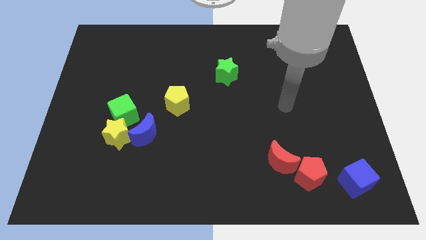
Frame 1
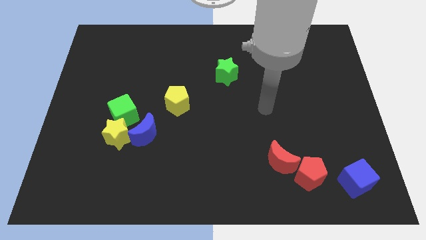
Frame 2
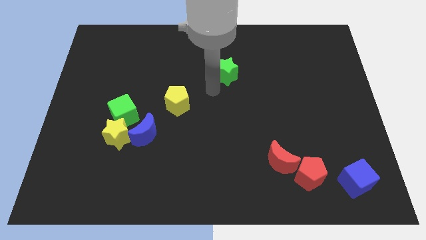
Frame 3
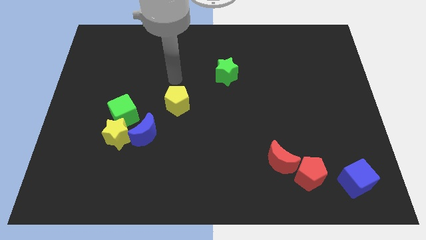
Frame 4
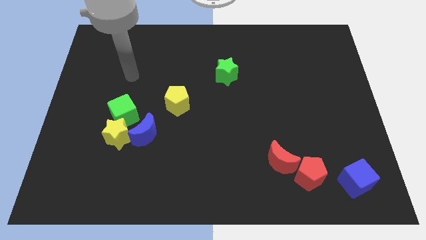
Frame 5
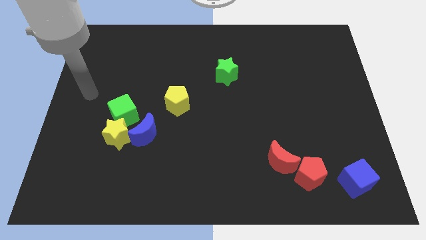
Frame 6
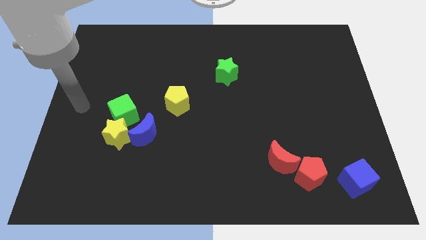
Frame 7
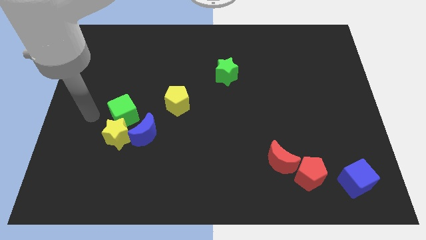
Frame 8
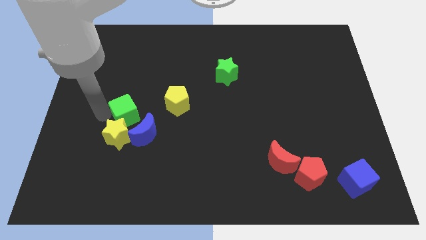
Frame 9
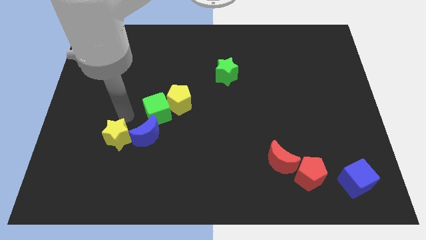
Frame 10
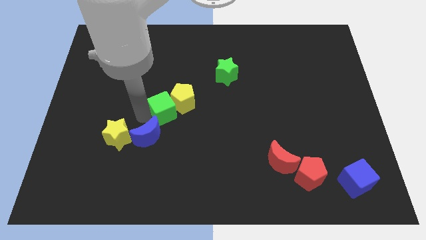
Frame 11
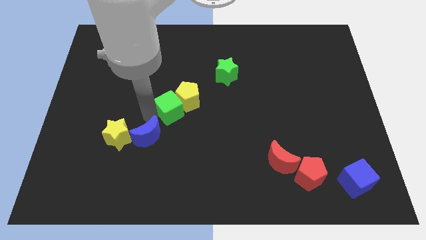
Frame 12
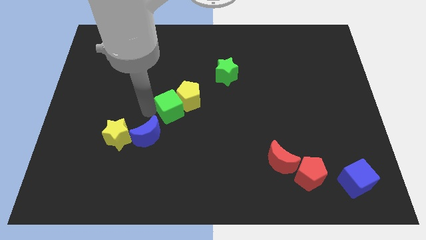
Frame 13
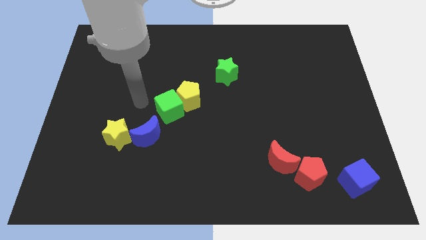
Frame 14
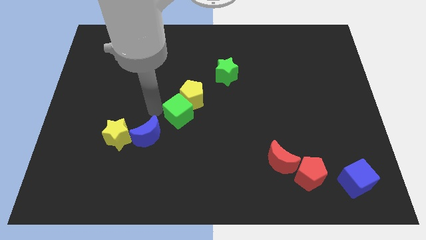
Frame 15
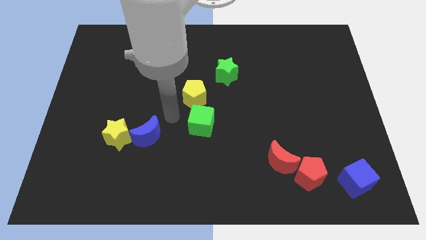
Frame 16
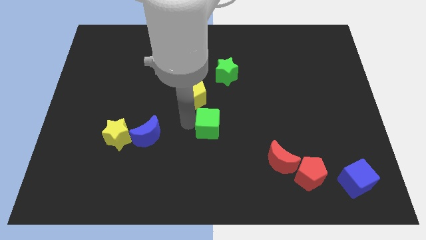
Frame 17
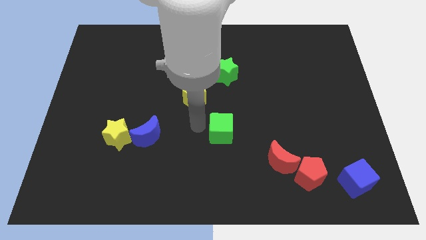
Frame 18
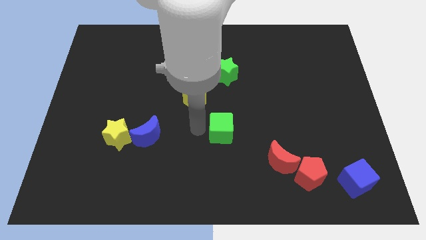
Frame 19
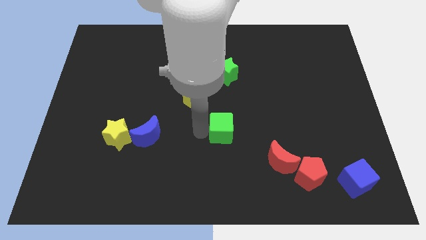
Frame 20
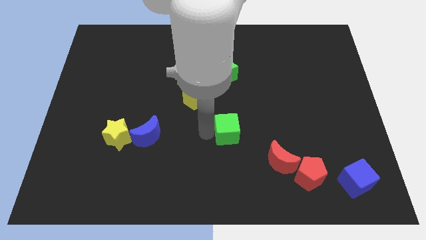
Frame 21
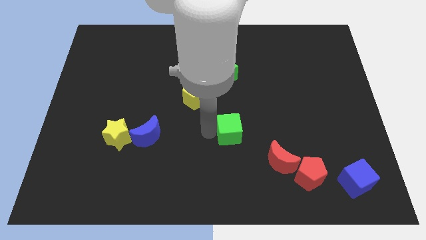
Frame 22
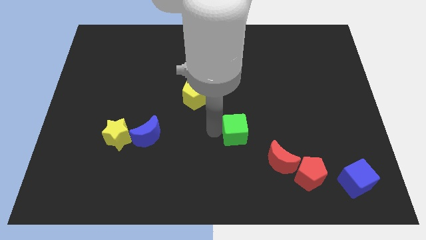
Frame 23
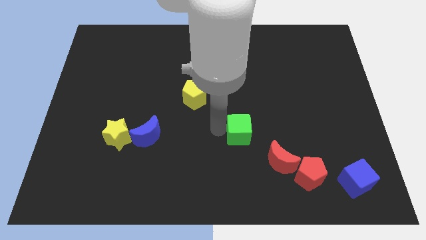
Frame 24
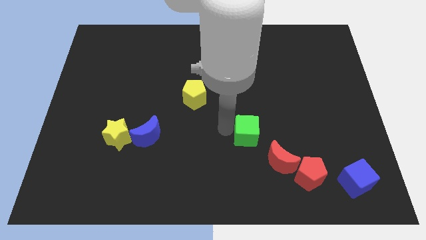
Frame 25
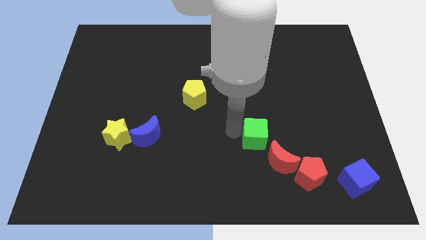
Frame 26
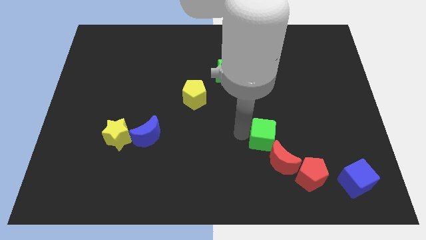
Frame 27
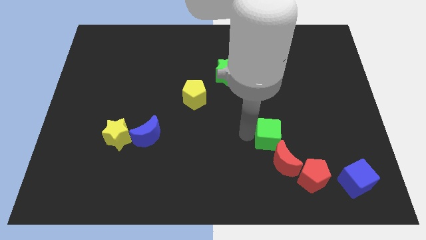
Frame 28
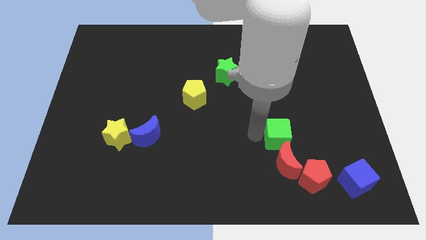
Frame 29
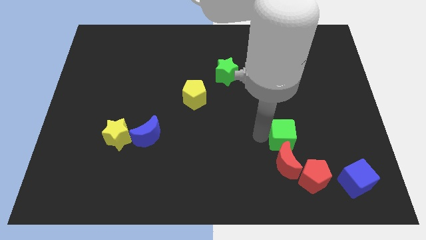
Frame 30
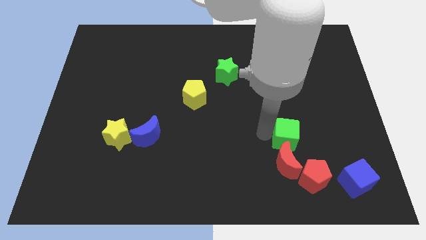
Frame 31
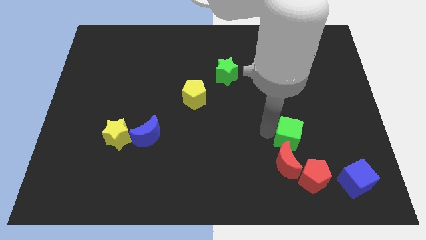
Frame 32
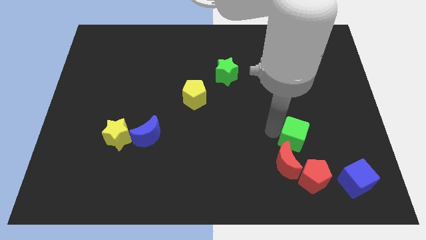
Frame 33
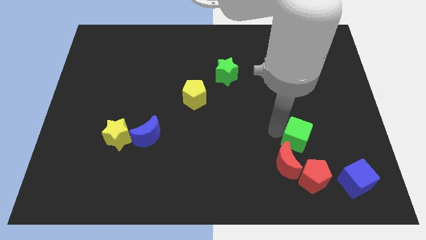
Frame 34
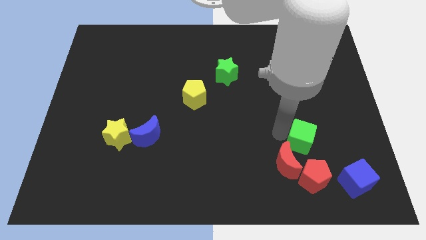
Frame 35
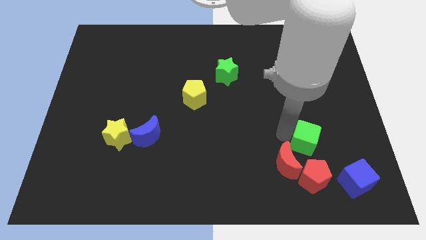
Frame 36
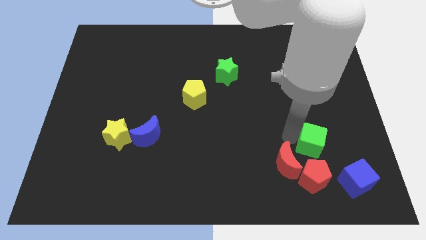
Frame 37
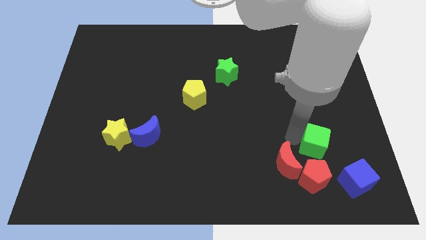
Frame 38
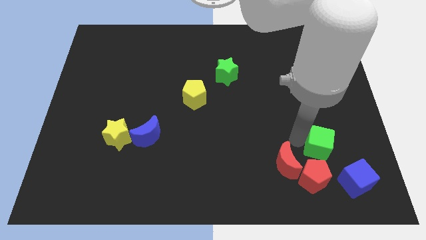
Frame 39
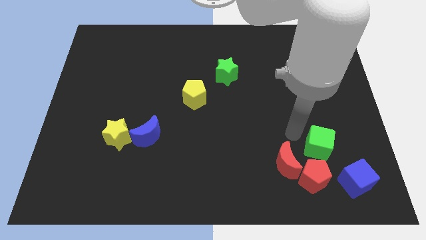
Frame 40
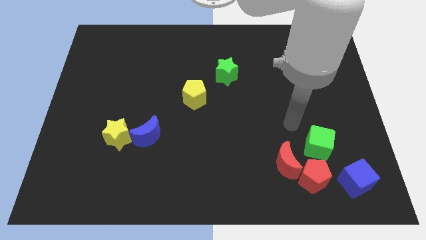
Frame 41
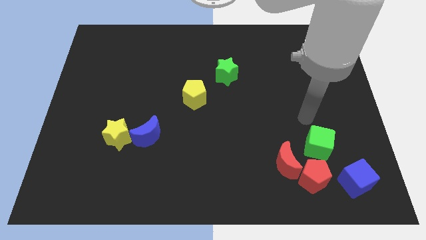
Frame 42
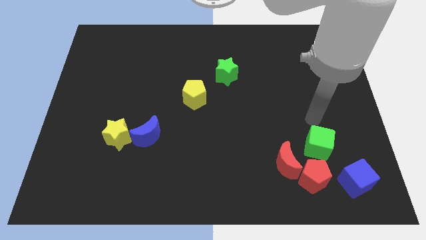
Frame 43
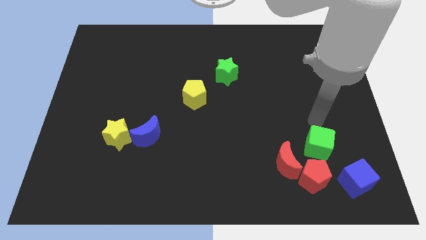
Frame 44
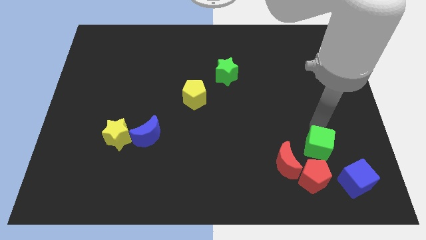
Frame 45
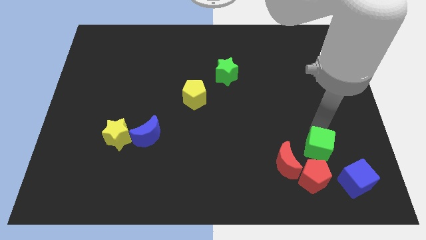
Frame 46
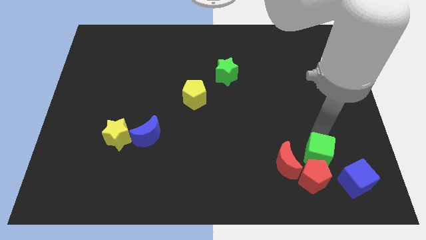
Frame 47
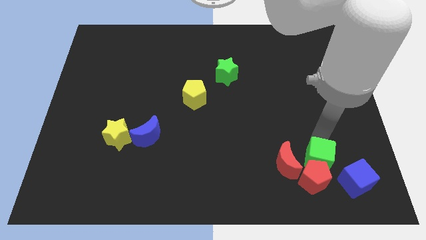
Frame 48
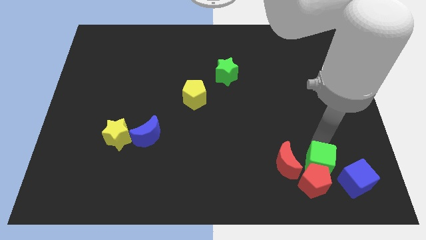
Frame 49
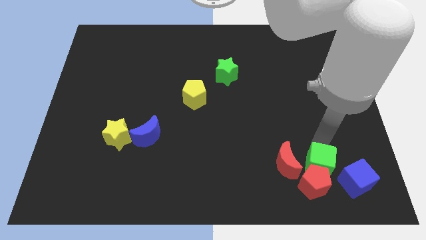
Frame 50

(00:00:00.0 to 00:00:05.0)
slide the green cube to the red pentagon

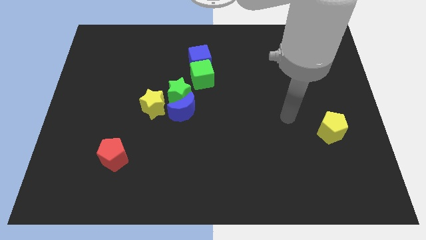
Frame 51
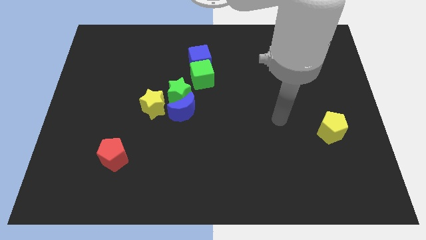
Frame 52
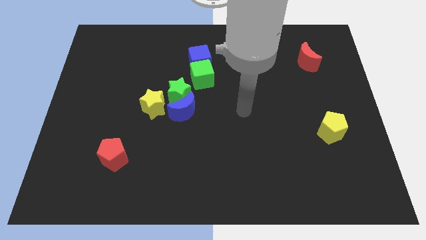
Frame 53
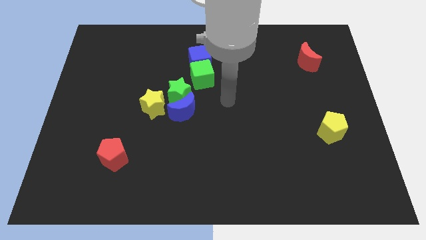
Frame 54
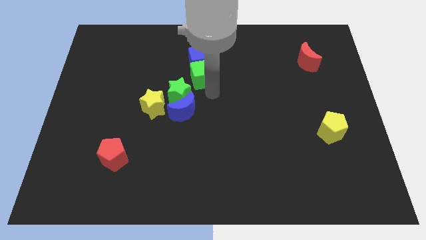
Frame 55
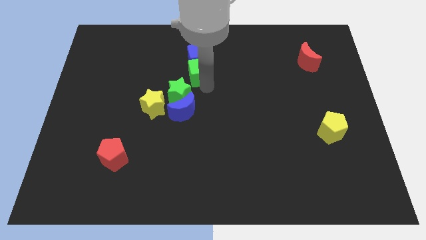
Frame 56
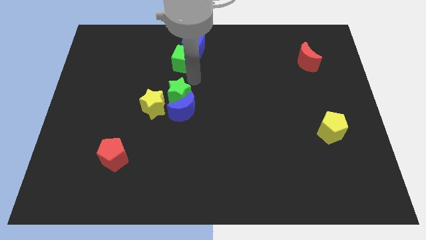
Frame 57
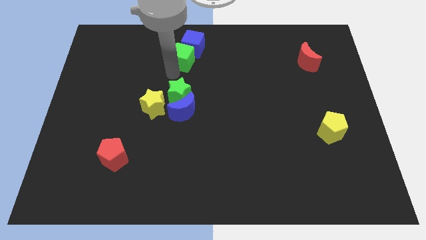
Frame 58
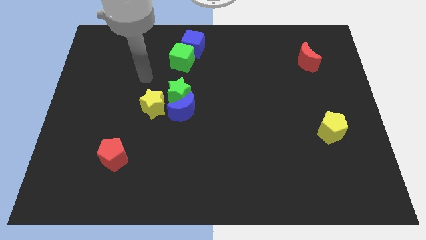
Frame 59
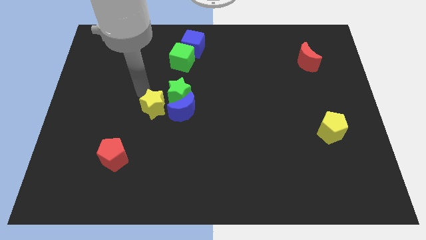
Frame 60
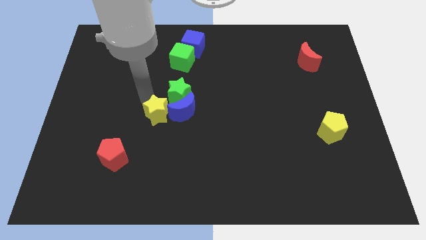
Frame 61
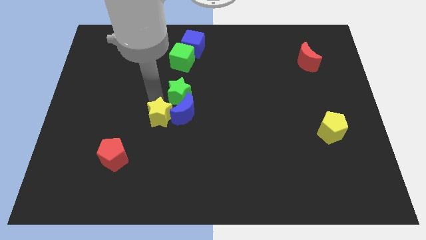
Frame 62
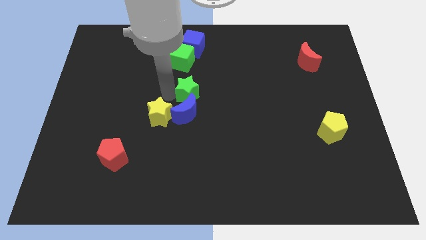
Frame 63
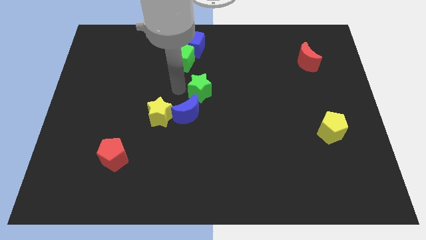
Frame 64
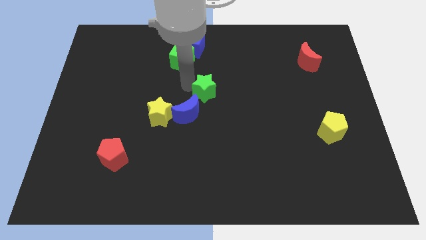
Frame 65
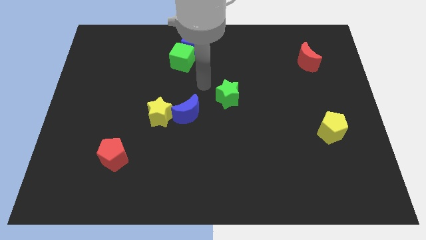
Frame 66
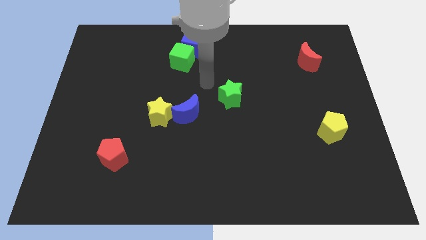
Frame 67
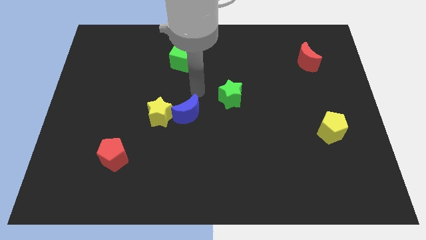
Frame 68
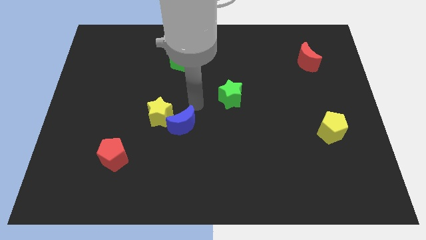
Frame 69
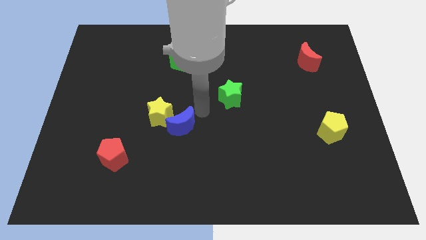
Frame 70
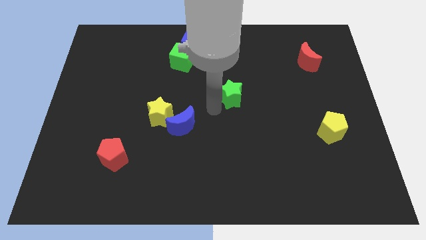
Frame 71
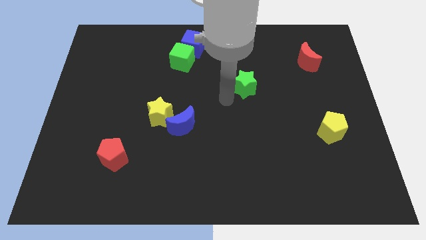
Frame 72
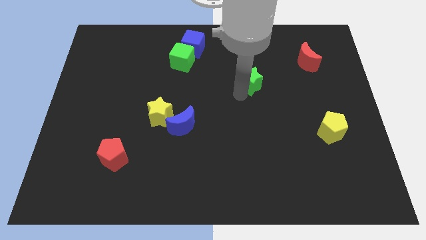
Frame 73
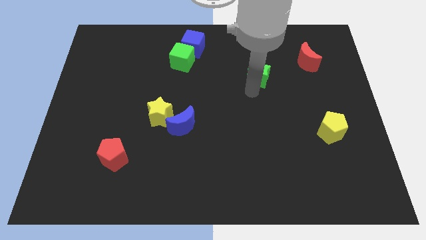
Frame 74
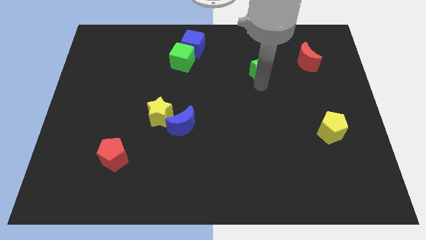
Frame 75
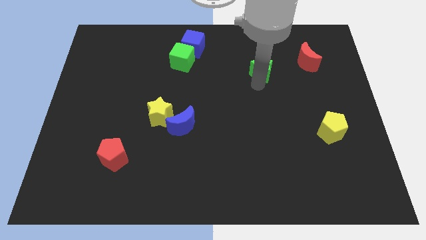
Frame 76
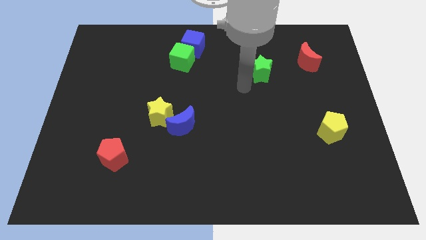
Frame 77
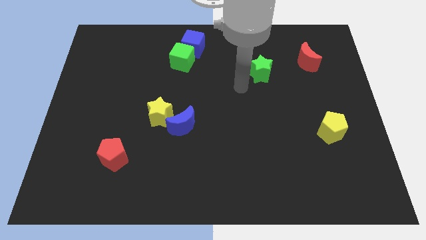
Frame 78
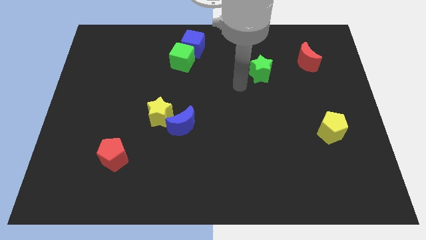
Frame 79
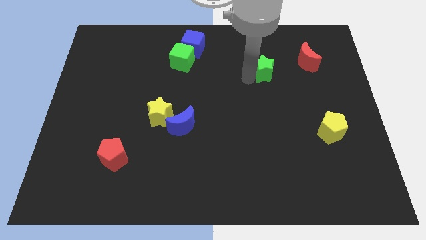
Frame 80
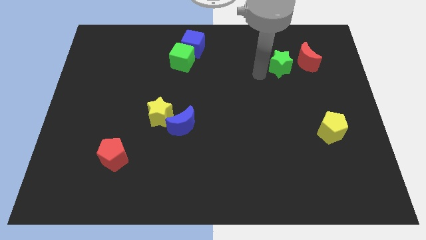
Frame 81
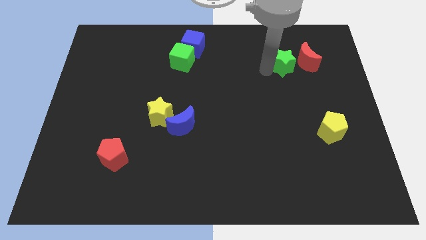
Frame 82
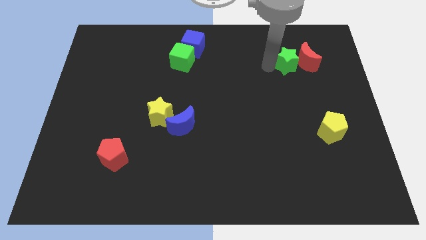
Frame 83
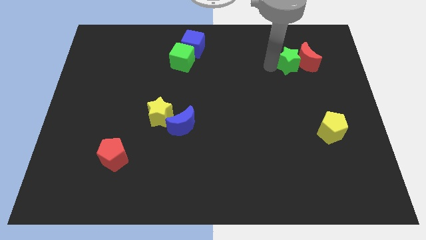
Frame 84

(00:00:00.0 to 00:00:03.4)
push the green star next to the red moon
